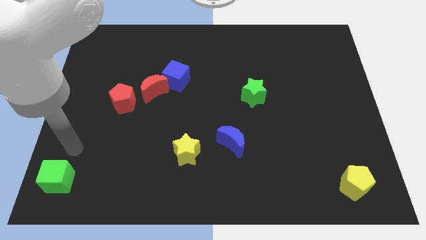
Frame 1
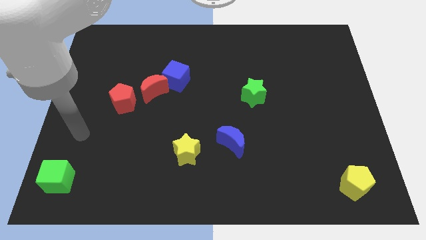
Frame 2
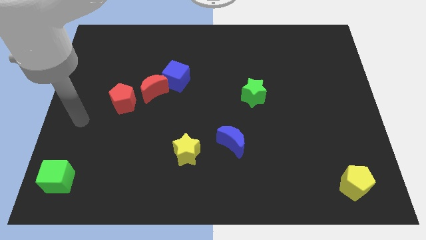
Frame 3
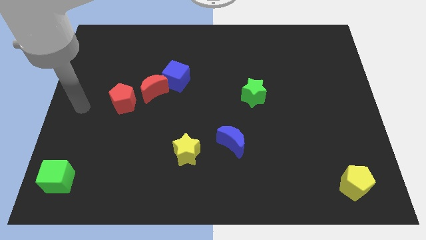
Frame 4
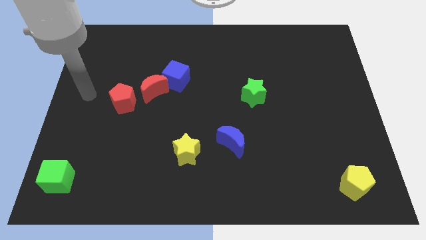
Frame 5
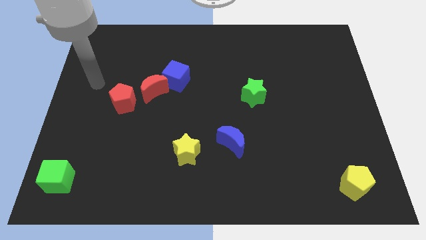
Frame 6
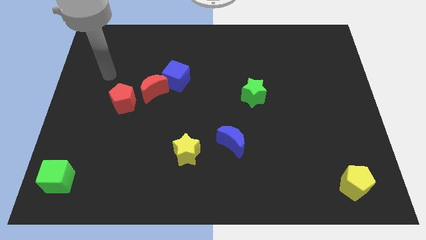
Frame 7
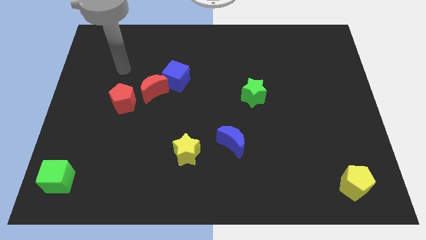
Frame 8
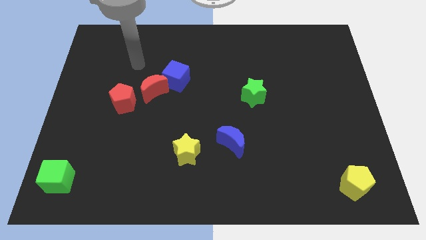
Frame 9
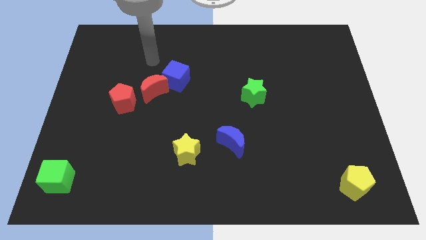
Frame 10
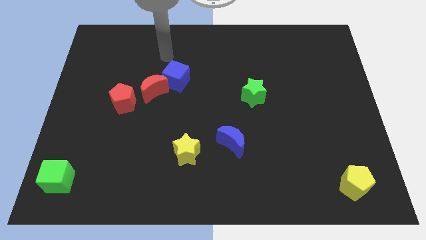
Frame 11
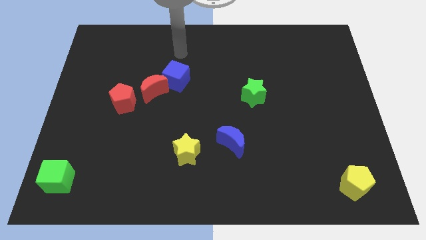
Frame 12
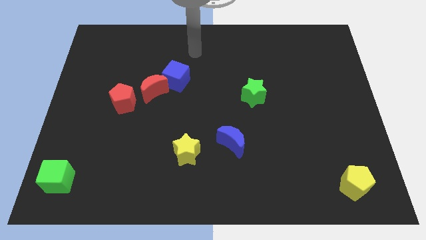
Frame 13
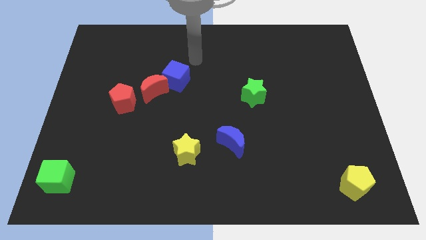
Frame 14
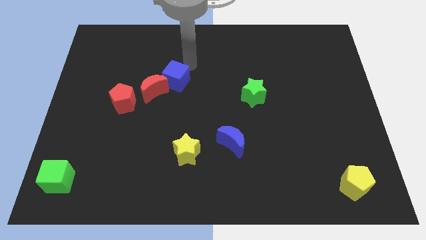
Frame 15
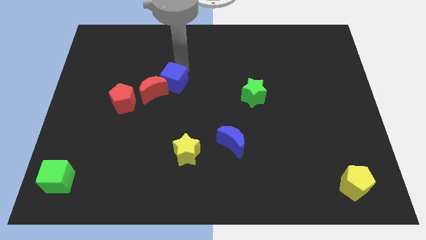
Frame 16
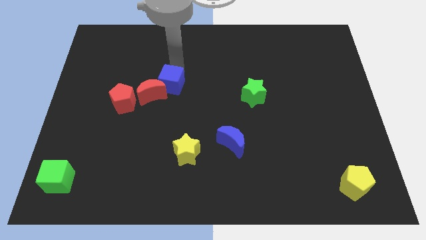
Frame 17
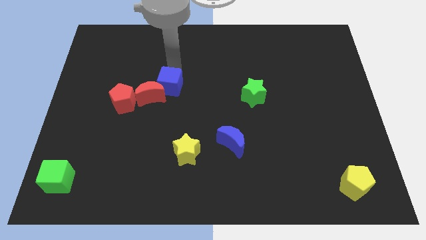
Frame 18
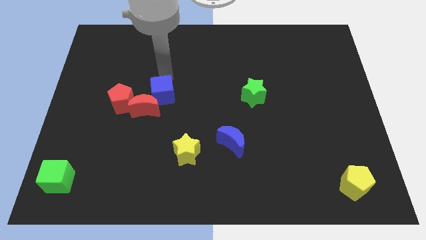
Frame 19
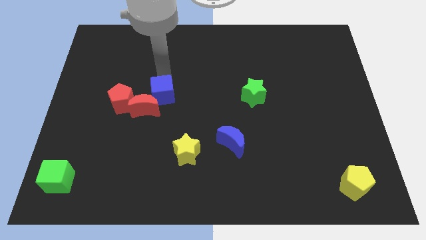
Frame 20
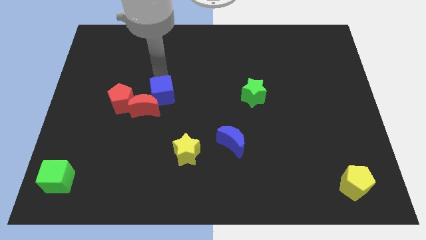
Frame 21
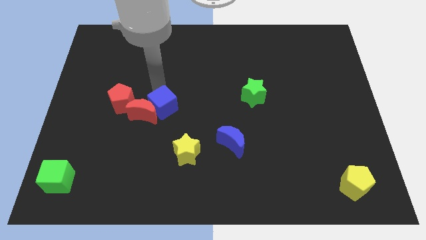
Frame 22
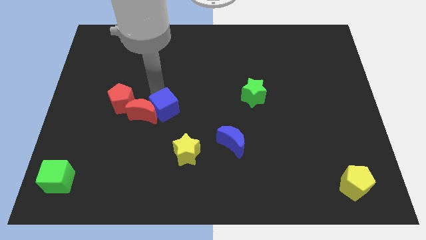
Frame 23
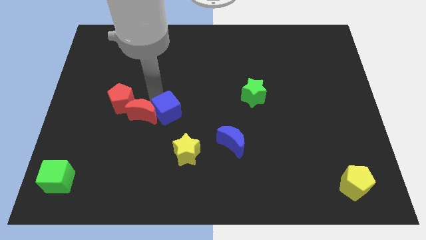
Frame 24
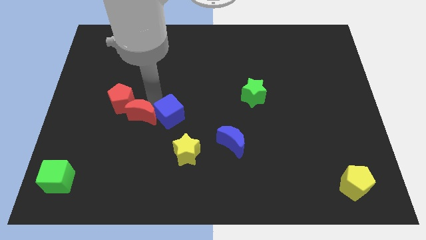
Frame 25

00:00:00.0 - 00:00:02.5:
push the blue cube into the red crescent

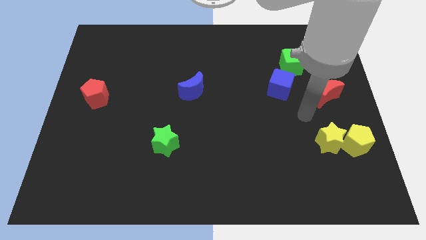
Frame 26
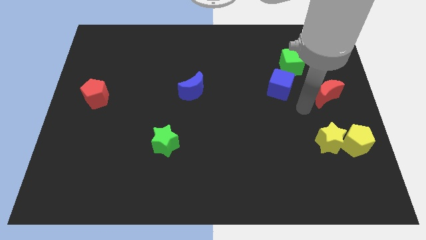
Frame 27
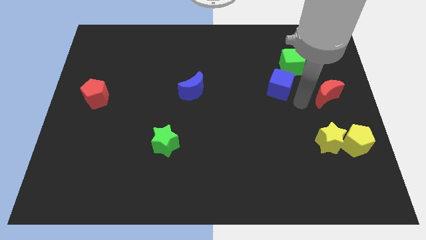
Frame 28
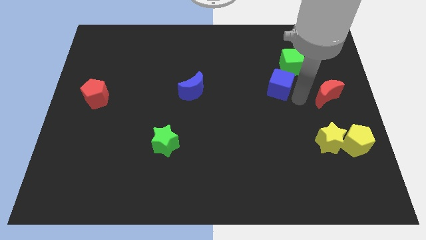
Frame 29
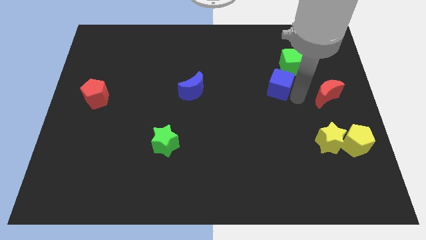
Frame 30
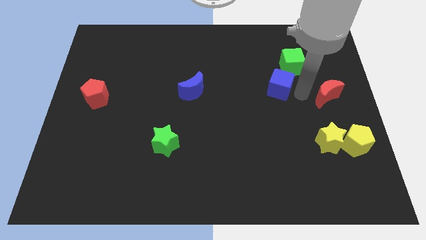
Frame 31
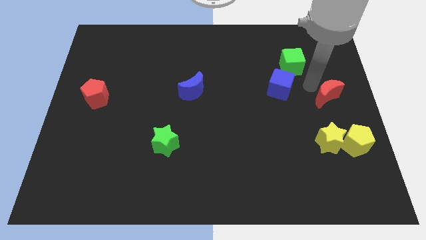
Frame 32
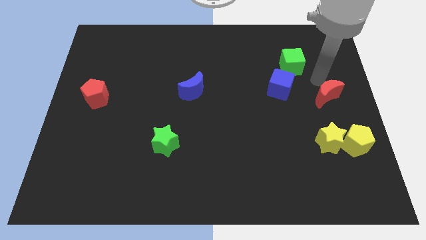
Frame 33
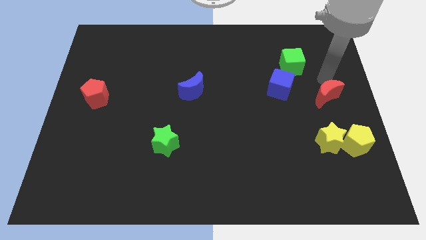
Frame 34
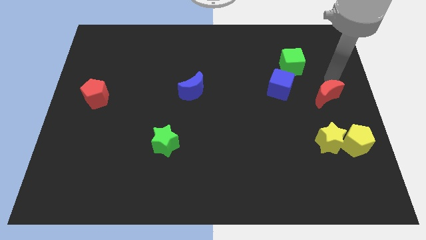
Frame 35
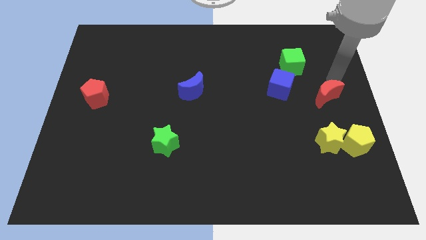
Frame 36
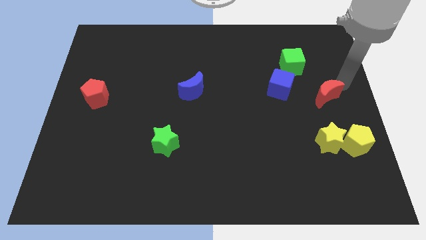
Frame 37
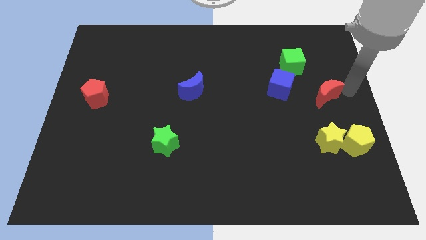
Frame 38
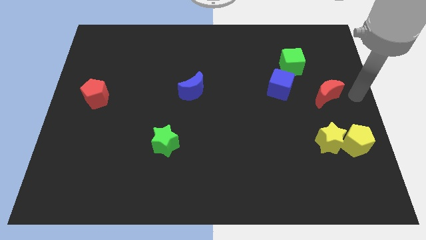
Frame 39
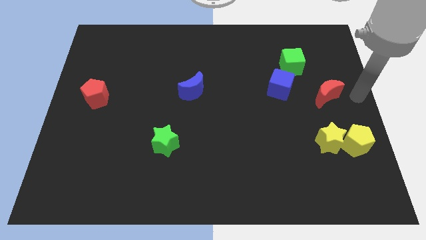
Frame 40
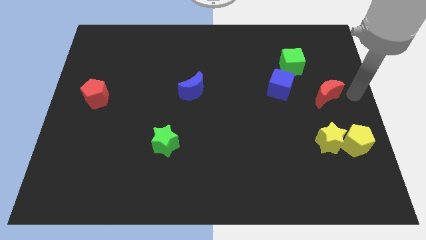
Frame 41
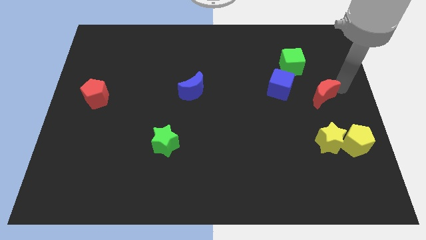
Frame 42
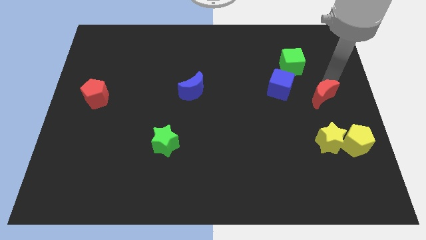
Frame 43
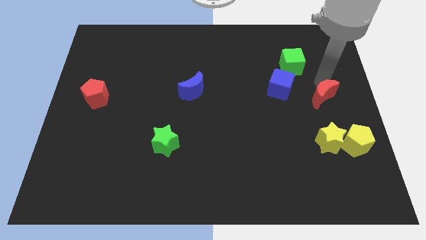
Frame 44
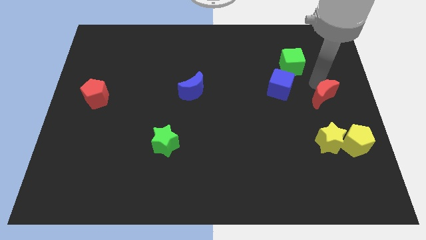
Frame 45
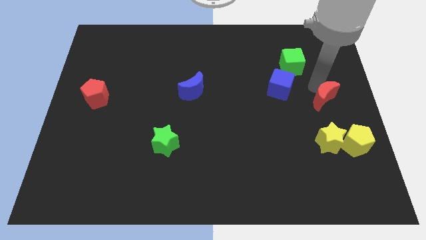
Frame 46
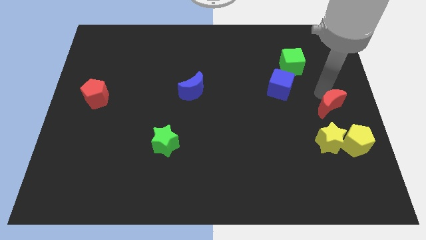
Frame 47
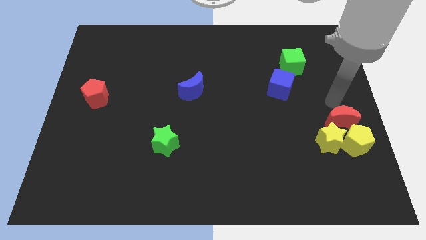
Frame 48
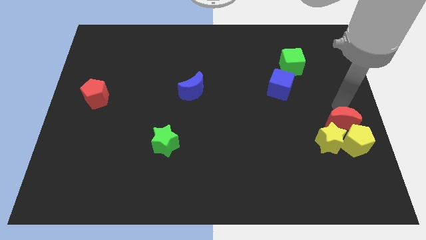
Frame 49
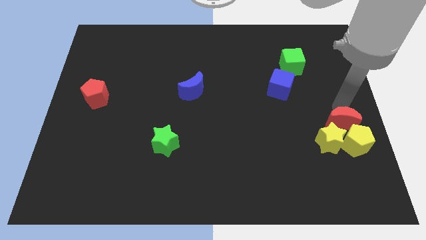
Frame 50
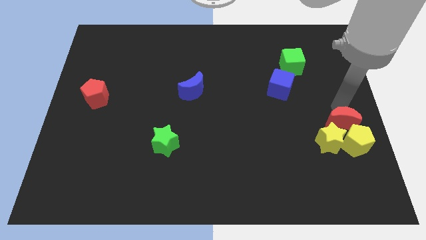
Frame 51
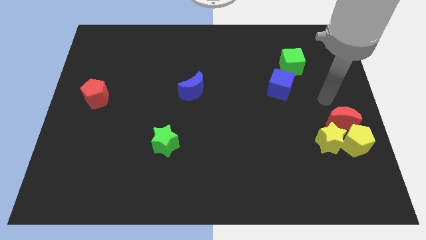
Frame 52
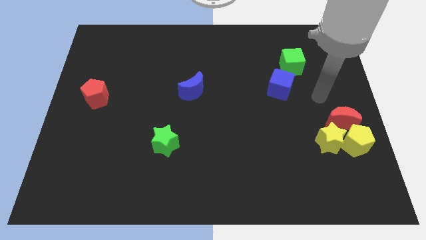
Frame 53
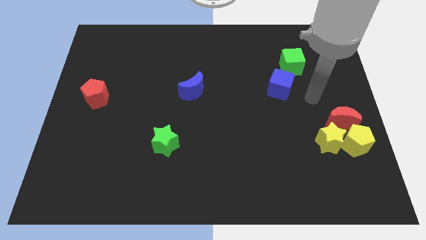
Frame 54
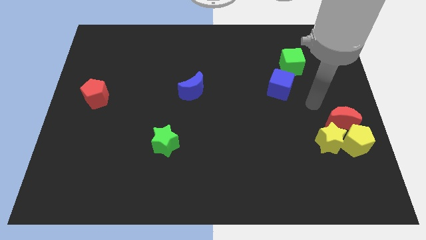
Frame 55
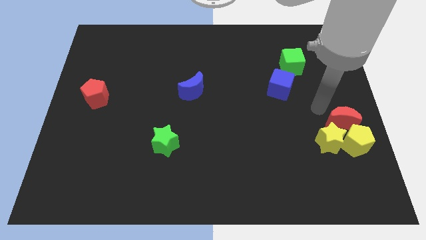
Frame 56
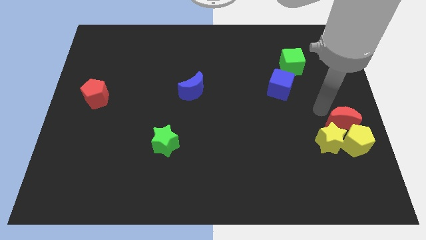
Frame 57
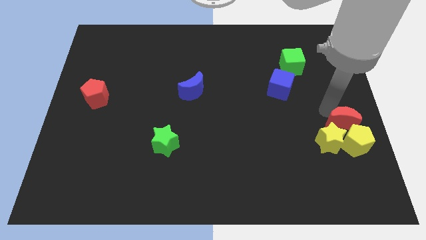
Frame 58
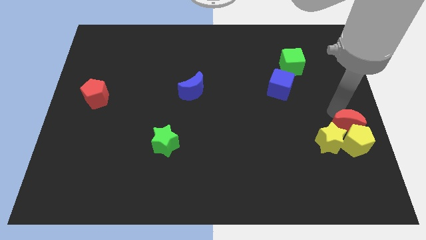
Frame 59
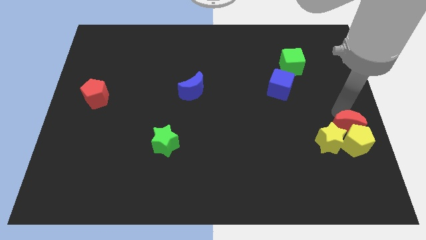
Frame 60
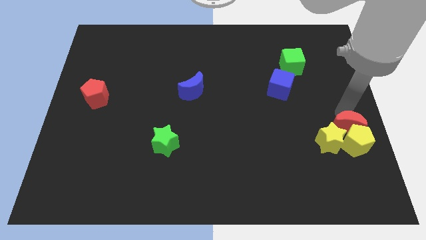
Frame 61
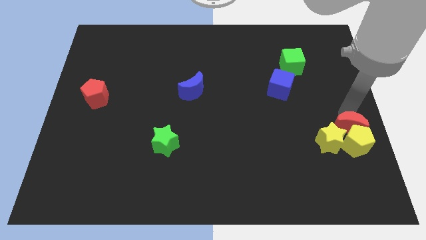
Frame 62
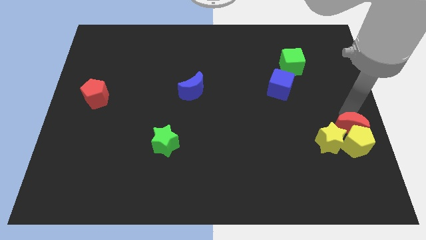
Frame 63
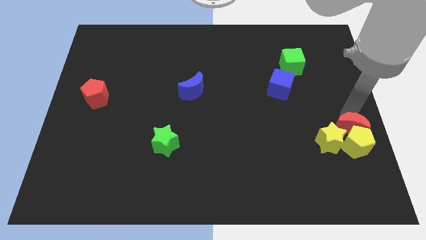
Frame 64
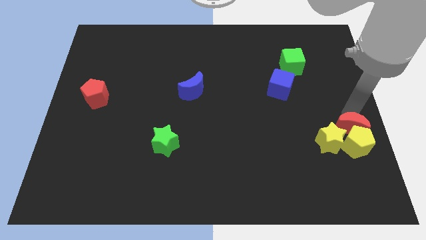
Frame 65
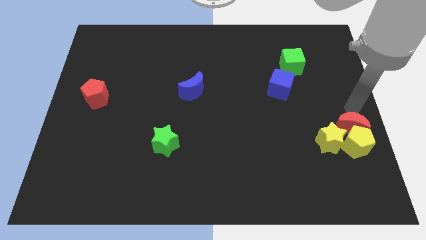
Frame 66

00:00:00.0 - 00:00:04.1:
drag the red crescent into the top side of the yellow pentagon

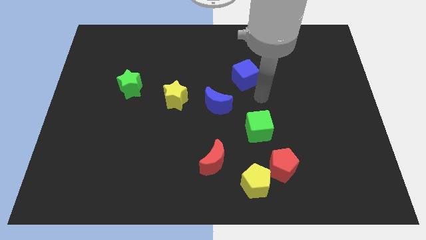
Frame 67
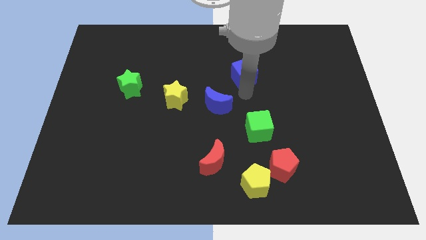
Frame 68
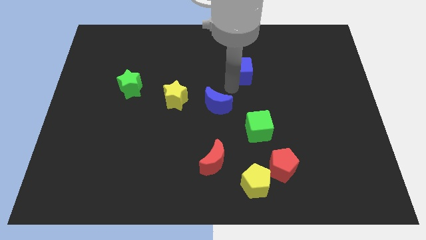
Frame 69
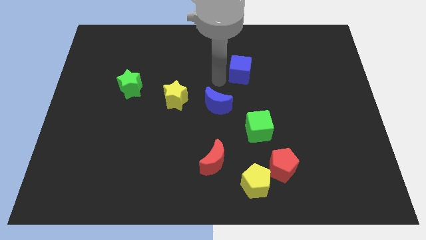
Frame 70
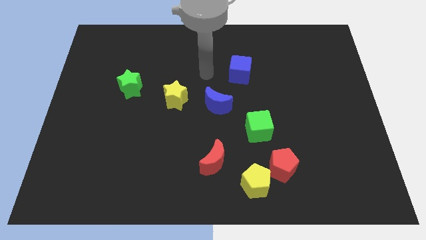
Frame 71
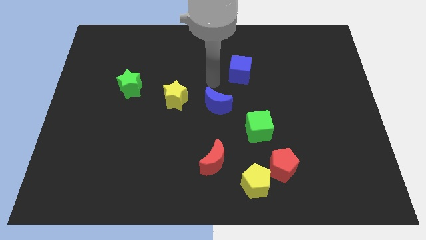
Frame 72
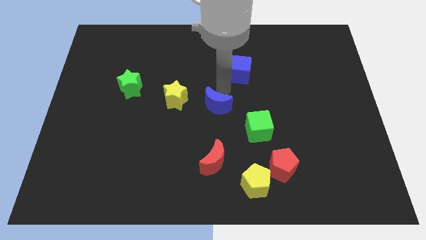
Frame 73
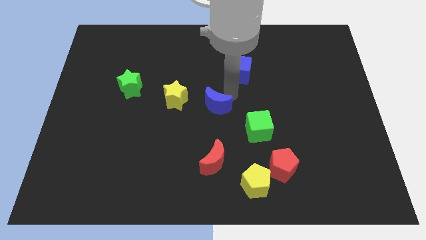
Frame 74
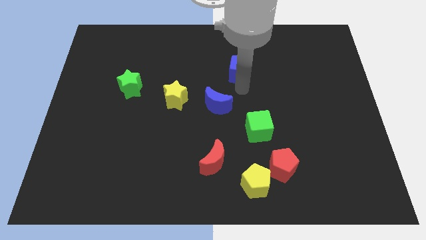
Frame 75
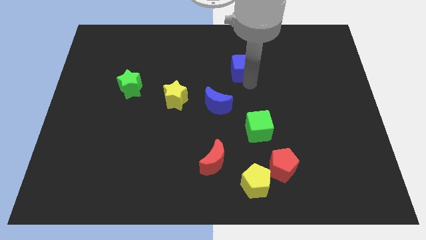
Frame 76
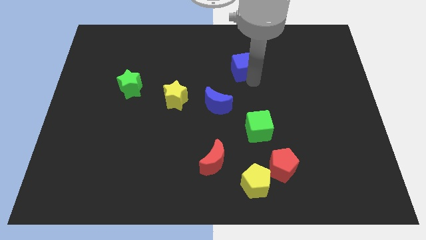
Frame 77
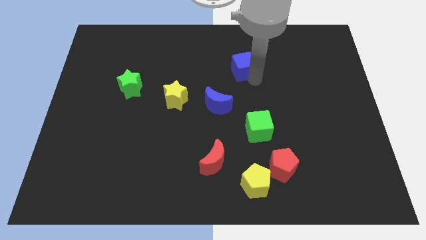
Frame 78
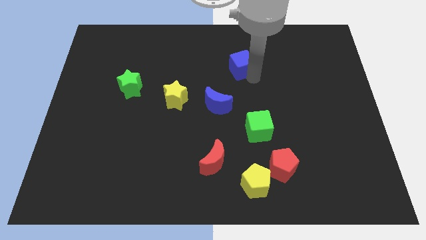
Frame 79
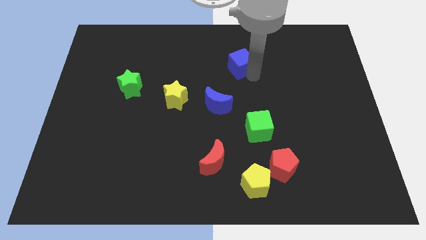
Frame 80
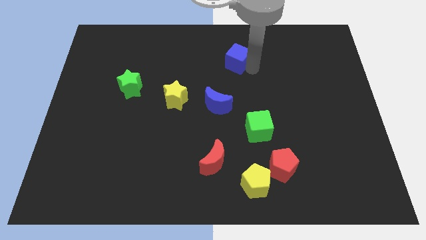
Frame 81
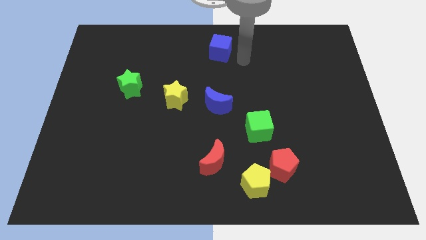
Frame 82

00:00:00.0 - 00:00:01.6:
place the blue cube vertically above the blue crescent

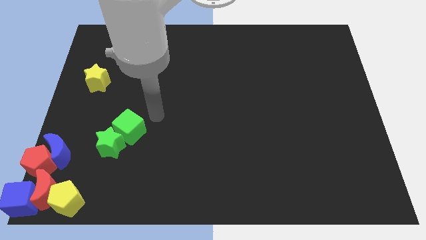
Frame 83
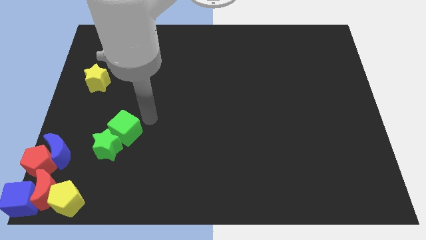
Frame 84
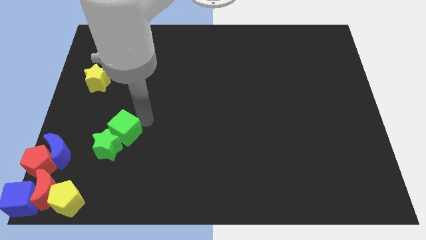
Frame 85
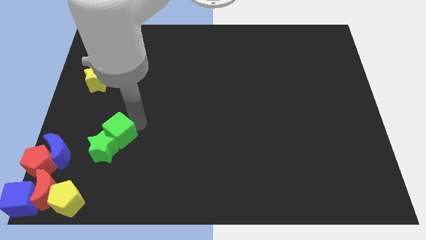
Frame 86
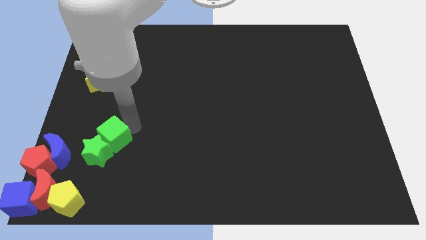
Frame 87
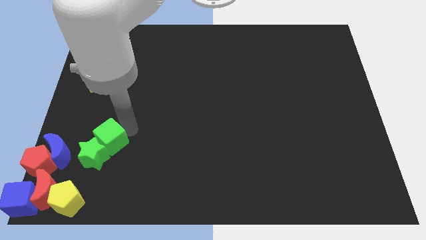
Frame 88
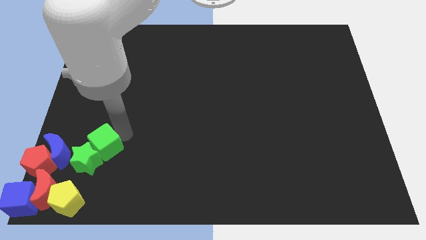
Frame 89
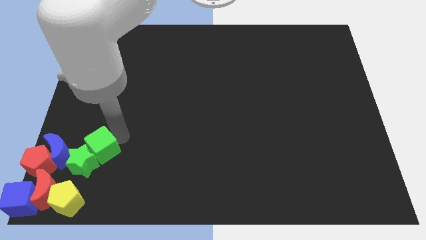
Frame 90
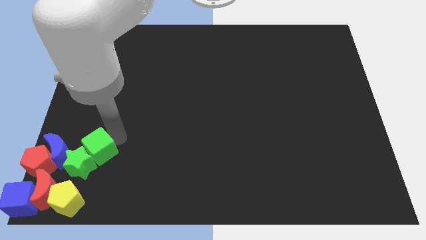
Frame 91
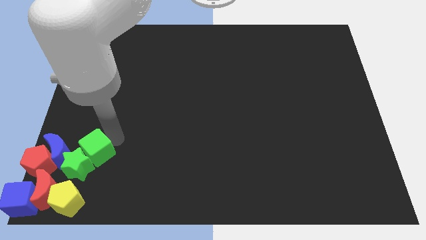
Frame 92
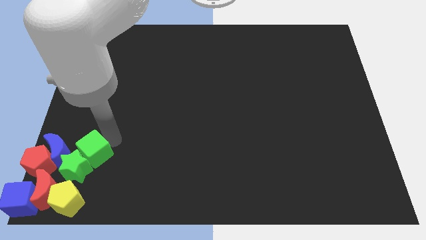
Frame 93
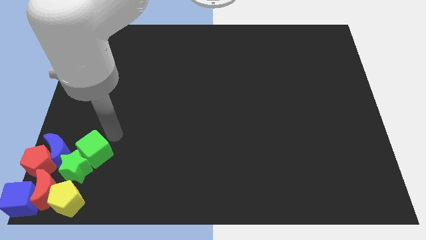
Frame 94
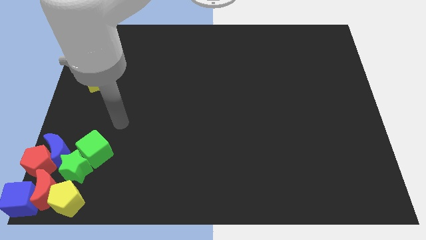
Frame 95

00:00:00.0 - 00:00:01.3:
push the green star with the green cube to the bottom left of the board
